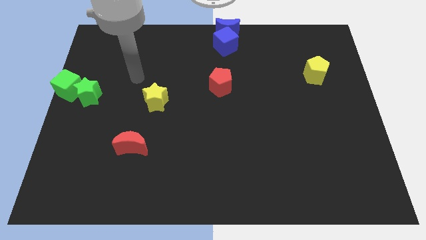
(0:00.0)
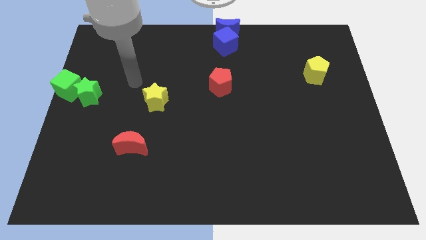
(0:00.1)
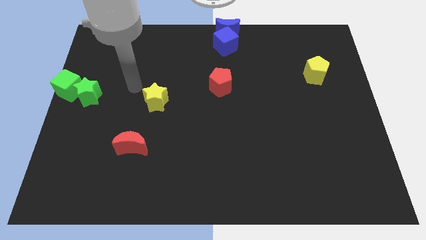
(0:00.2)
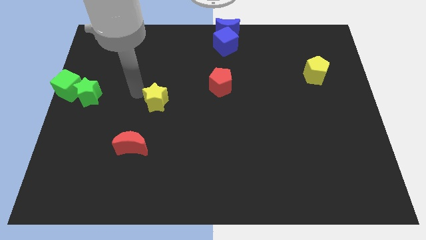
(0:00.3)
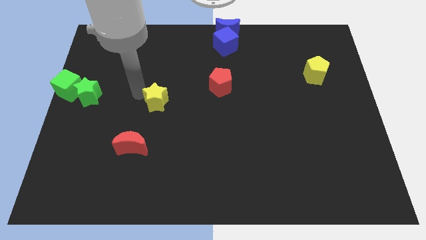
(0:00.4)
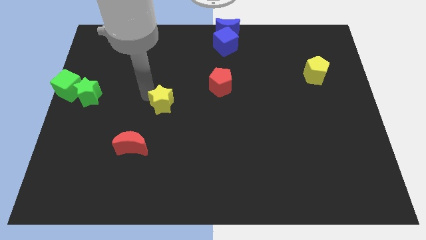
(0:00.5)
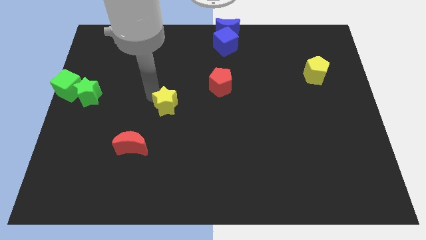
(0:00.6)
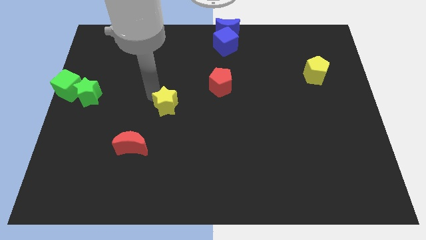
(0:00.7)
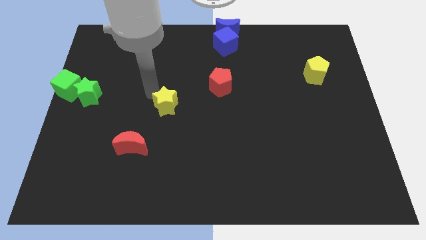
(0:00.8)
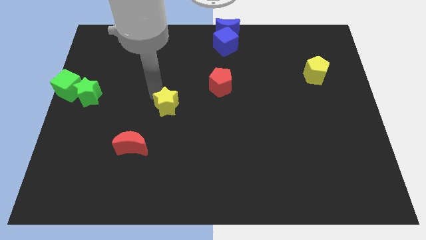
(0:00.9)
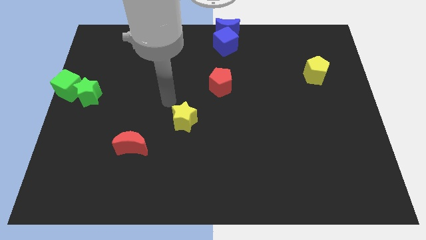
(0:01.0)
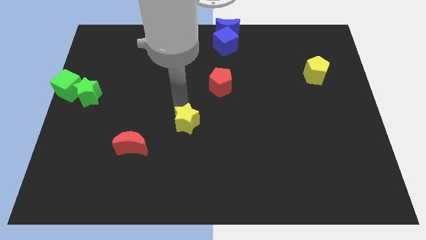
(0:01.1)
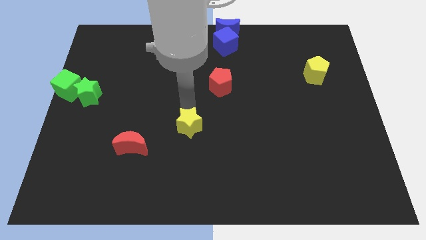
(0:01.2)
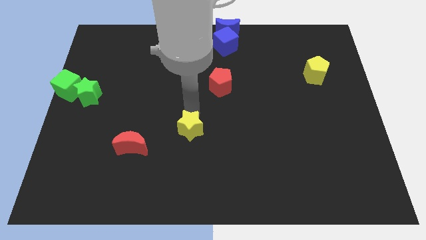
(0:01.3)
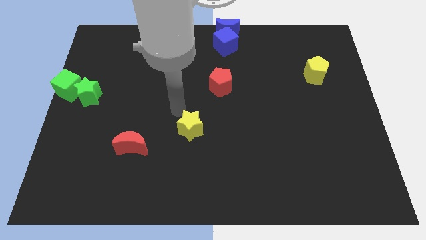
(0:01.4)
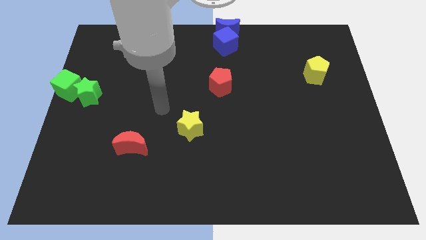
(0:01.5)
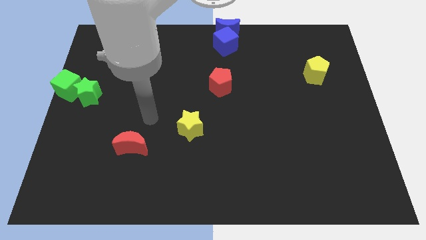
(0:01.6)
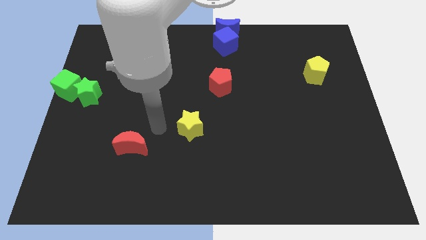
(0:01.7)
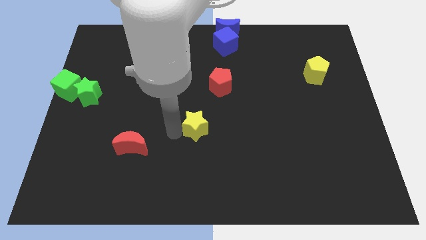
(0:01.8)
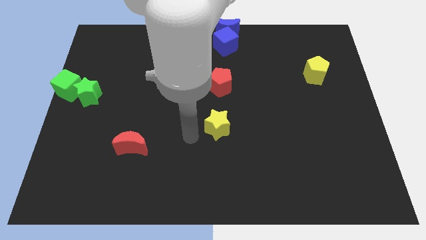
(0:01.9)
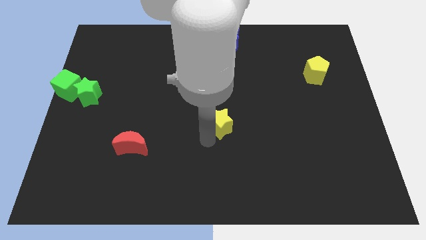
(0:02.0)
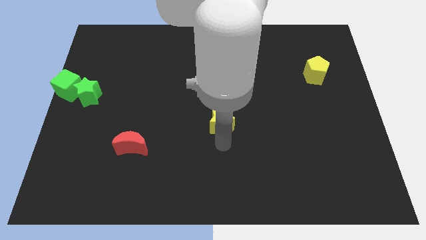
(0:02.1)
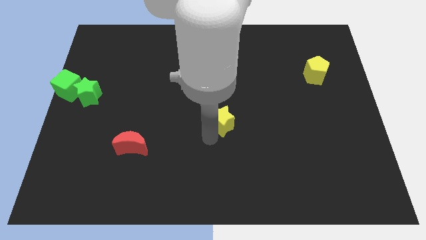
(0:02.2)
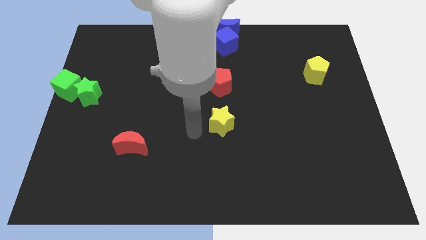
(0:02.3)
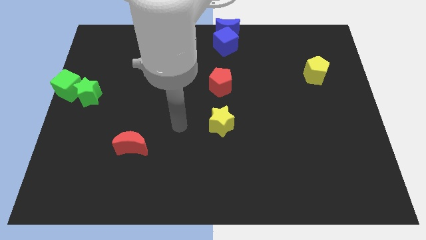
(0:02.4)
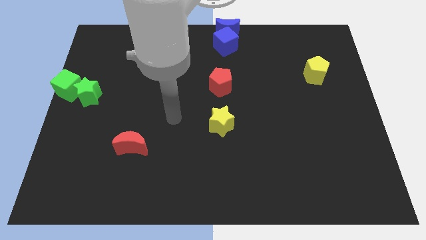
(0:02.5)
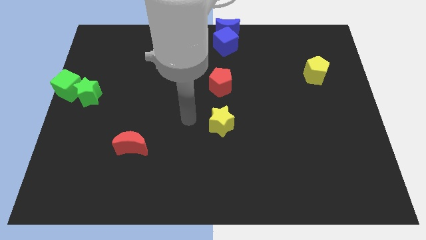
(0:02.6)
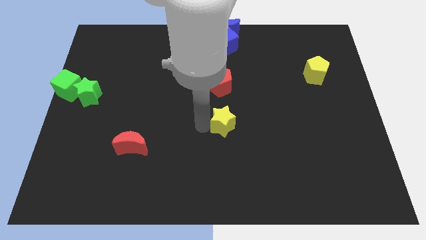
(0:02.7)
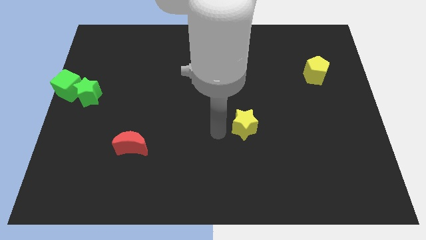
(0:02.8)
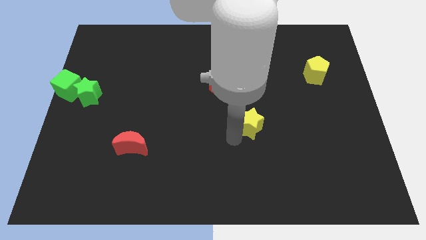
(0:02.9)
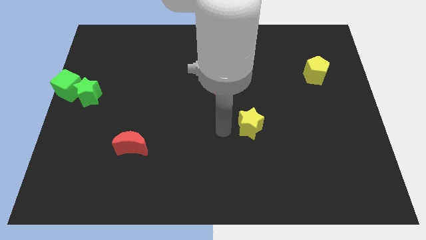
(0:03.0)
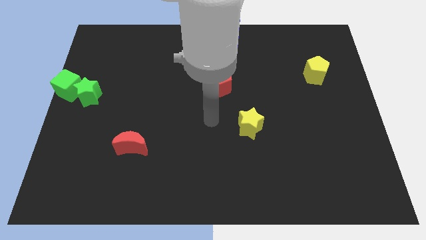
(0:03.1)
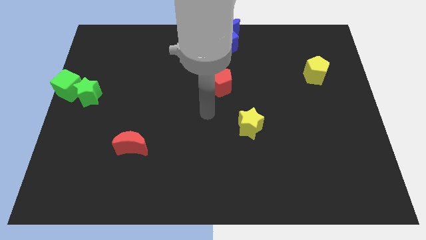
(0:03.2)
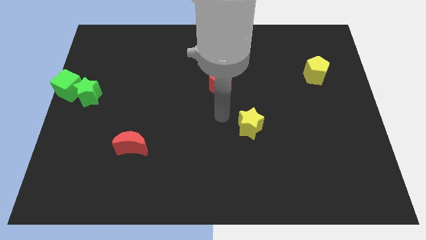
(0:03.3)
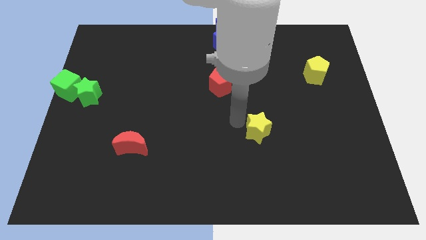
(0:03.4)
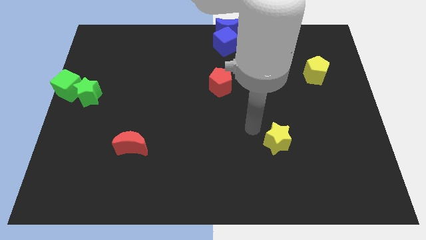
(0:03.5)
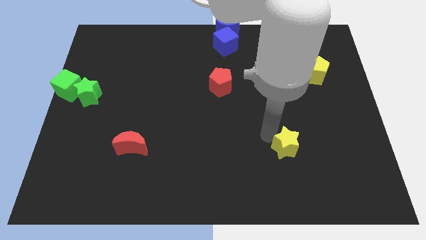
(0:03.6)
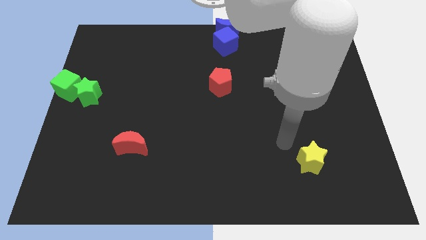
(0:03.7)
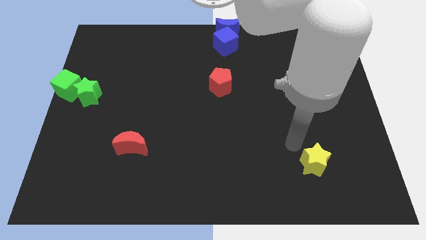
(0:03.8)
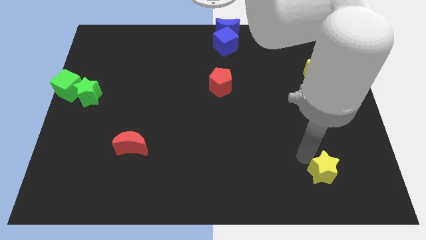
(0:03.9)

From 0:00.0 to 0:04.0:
push the yellow star towards the bottom right side of the board

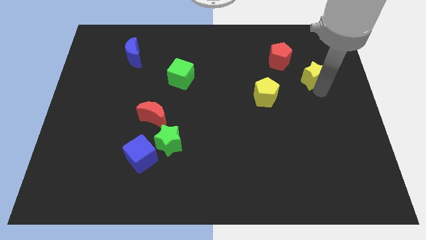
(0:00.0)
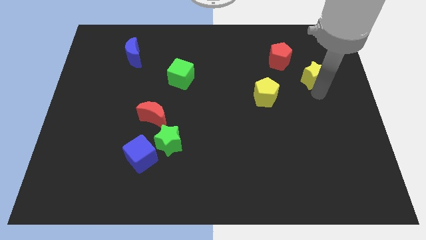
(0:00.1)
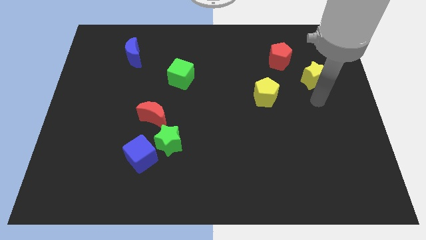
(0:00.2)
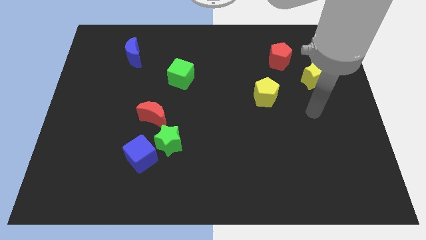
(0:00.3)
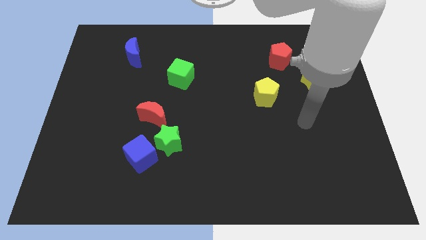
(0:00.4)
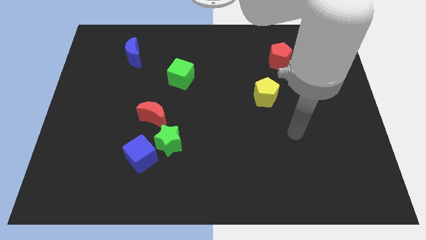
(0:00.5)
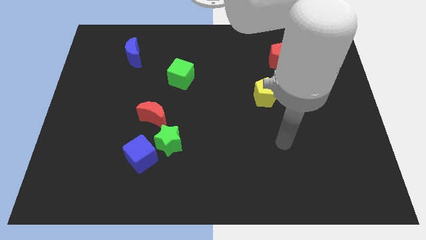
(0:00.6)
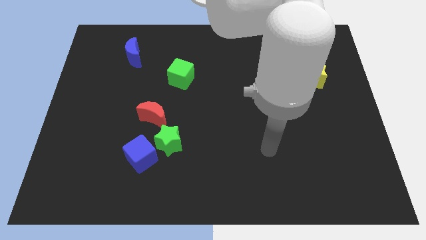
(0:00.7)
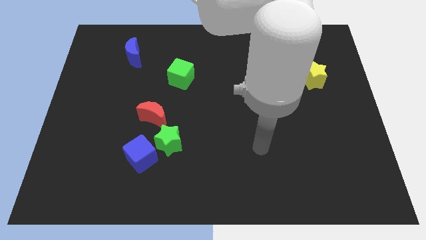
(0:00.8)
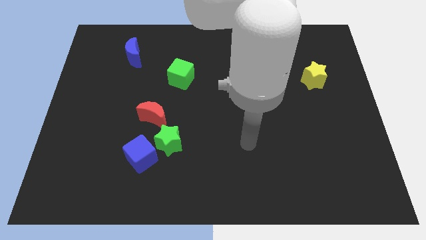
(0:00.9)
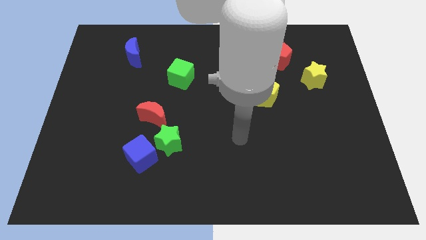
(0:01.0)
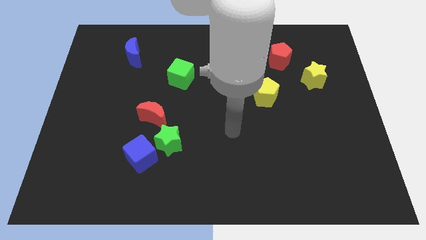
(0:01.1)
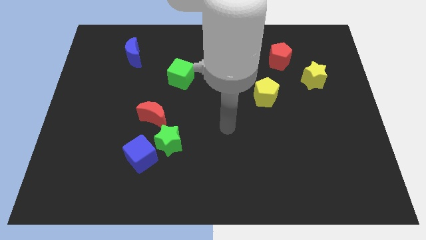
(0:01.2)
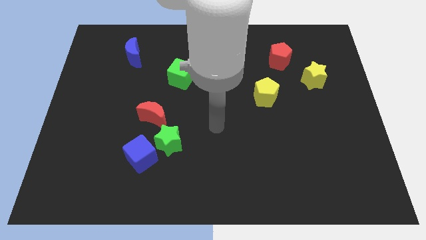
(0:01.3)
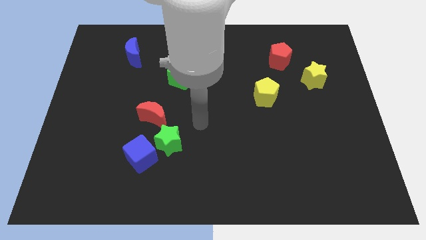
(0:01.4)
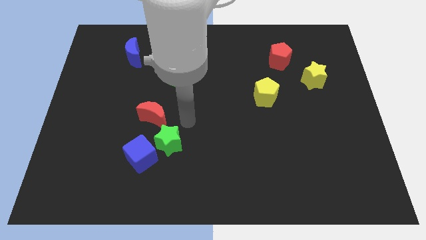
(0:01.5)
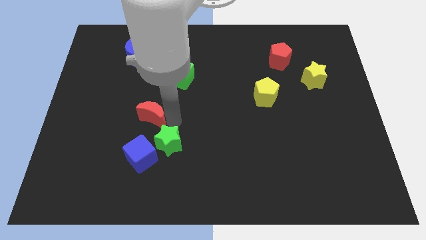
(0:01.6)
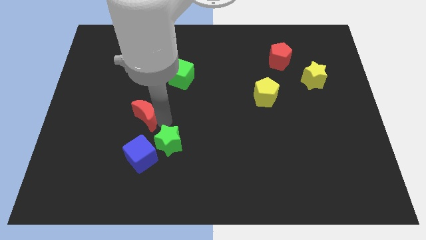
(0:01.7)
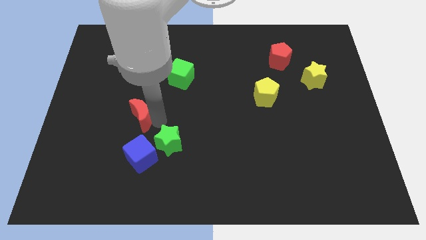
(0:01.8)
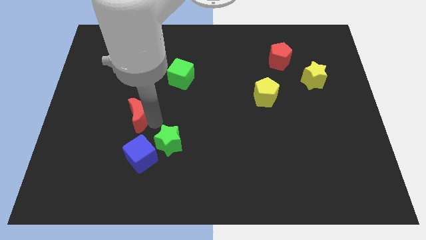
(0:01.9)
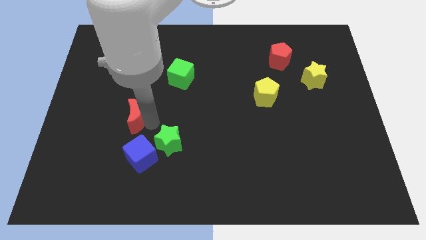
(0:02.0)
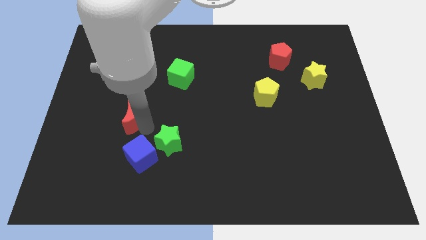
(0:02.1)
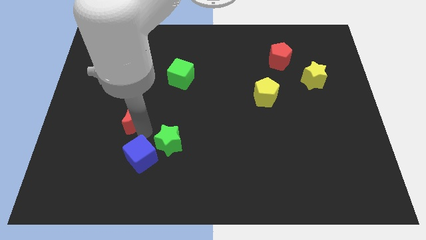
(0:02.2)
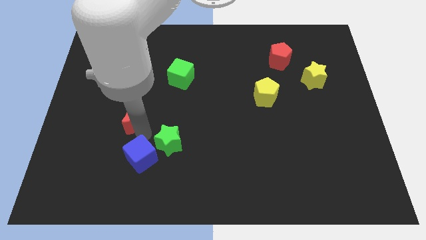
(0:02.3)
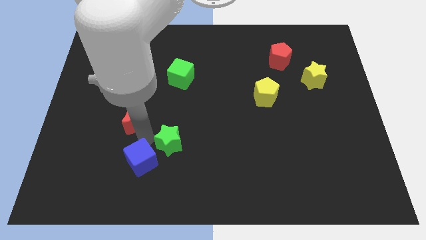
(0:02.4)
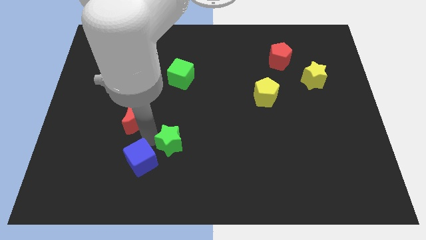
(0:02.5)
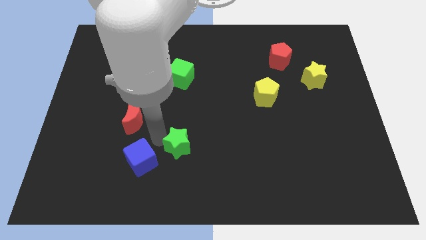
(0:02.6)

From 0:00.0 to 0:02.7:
move your arm away from the yellow star

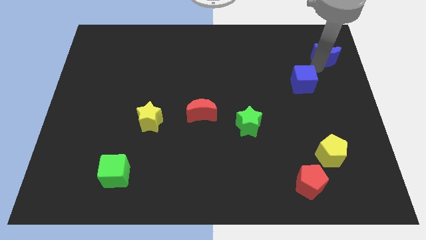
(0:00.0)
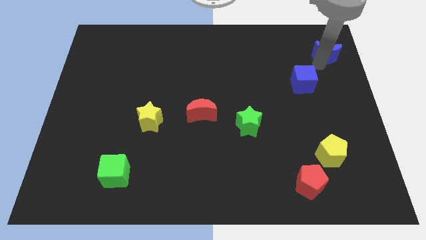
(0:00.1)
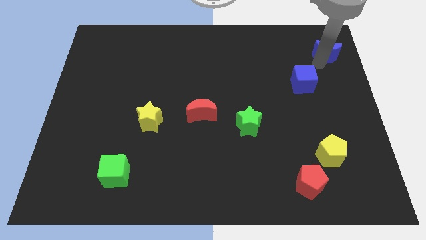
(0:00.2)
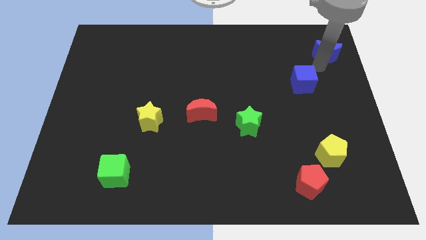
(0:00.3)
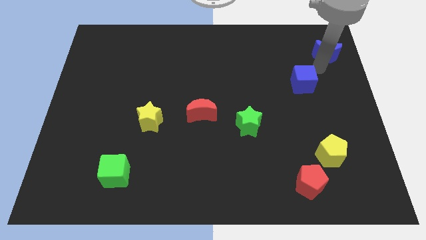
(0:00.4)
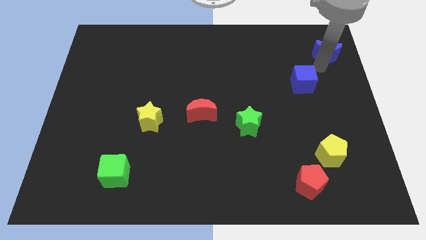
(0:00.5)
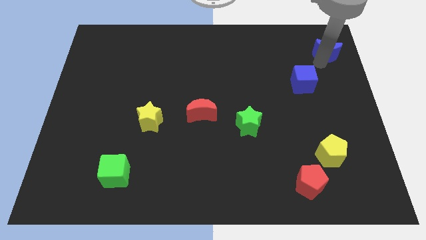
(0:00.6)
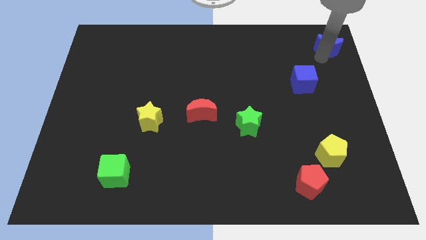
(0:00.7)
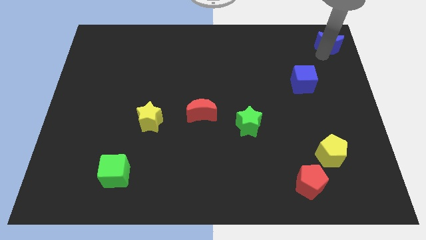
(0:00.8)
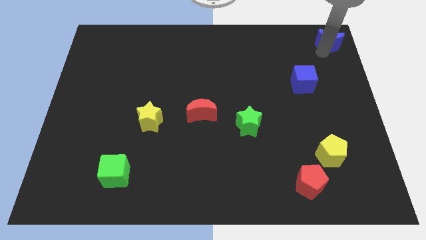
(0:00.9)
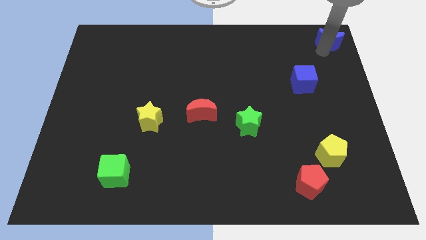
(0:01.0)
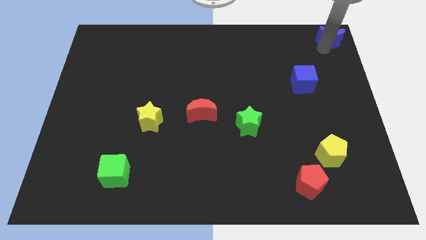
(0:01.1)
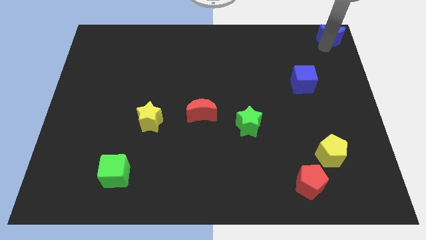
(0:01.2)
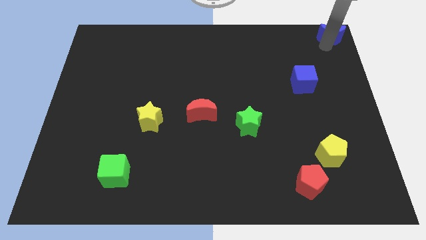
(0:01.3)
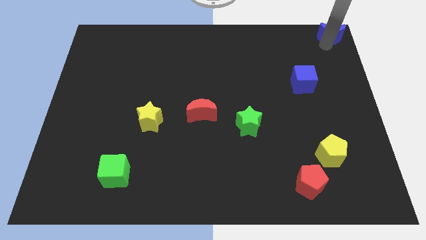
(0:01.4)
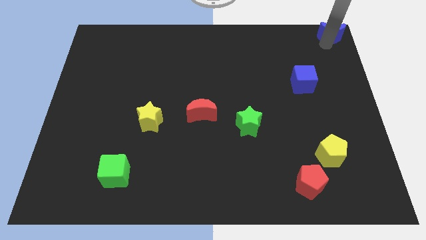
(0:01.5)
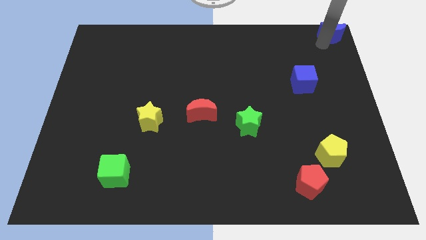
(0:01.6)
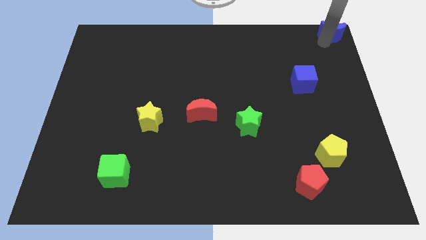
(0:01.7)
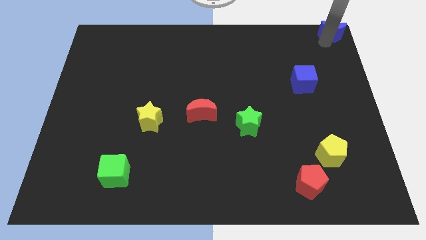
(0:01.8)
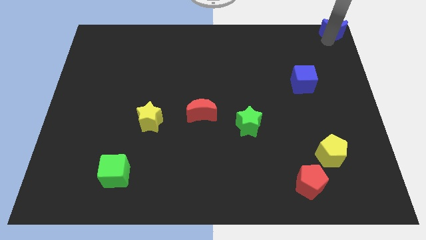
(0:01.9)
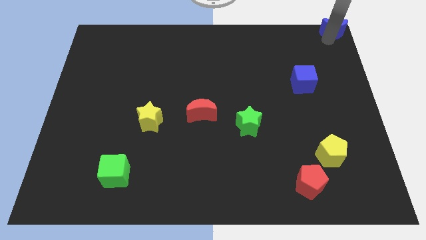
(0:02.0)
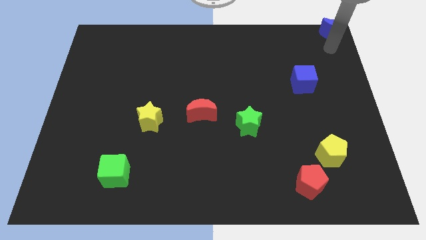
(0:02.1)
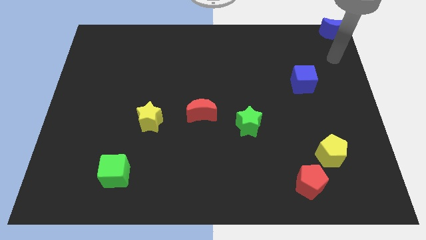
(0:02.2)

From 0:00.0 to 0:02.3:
push the blue moon to the top right corner of the board
